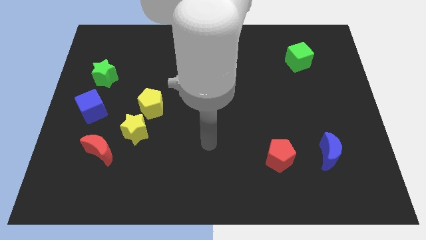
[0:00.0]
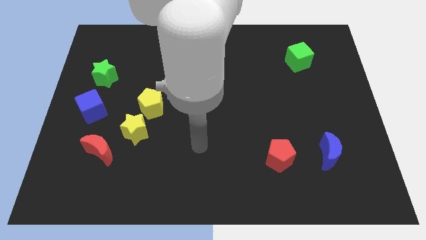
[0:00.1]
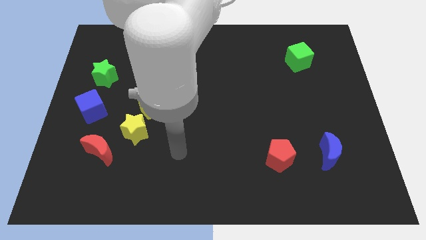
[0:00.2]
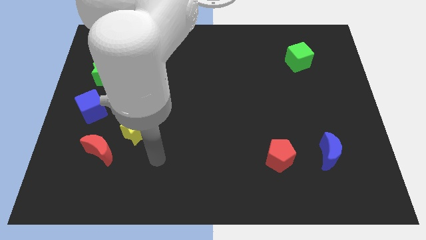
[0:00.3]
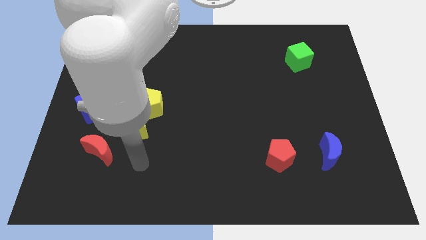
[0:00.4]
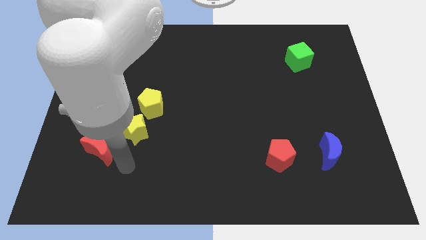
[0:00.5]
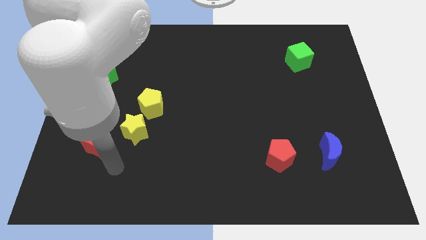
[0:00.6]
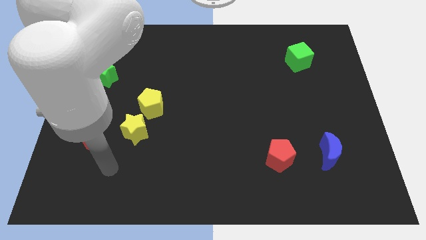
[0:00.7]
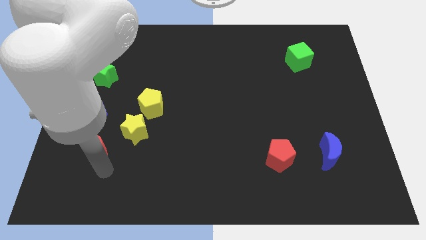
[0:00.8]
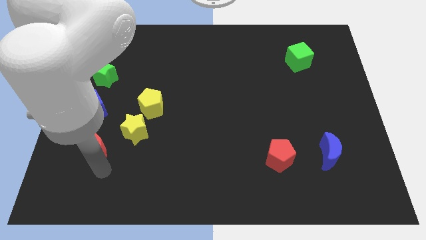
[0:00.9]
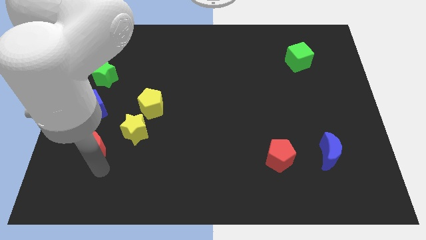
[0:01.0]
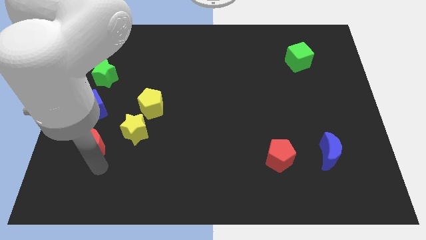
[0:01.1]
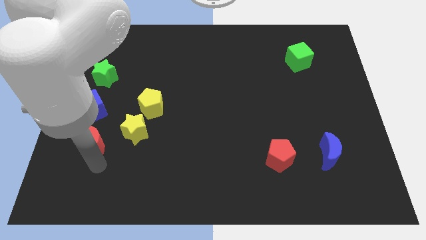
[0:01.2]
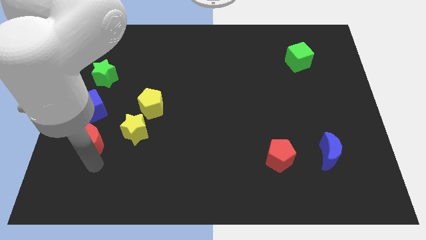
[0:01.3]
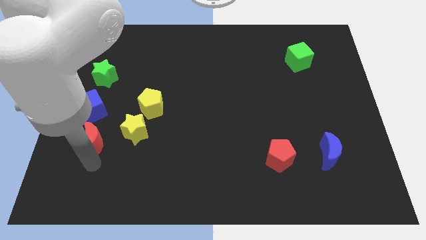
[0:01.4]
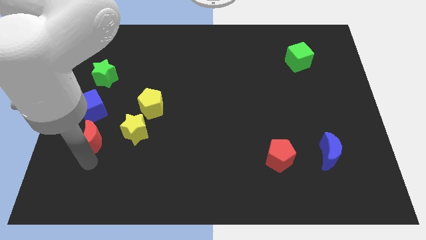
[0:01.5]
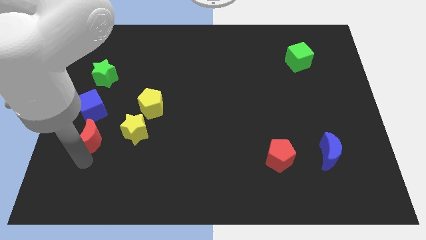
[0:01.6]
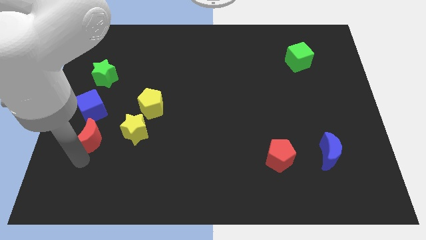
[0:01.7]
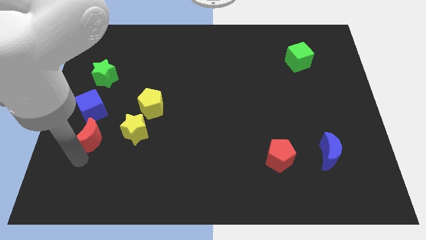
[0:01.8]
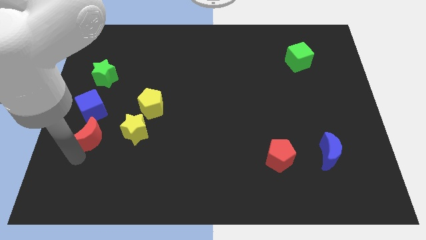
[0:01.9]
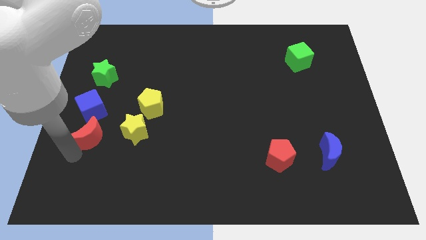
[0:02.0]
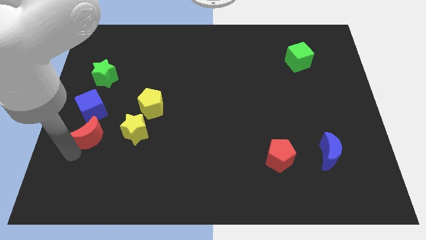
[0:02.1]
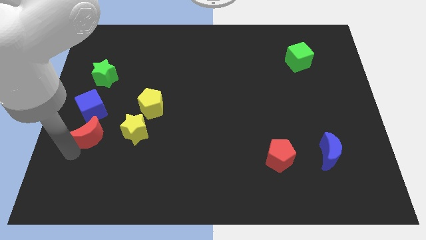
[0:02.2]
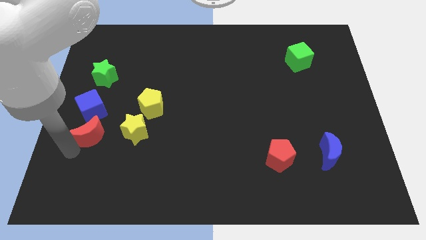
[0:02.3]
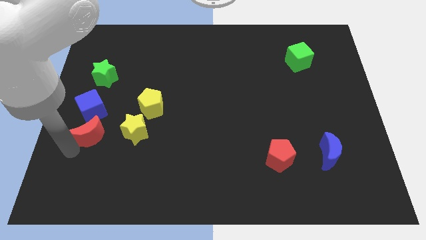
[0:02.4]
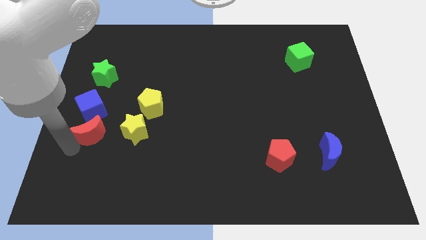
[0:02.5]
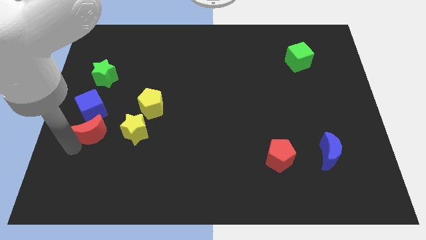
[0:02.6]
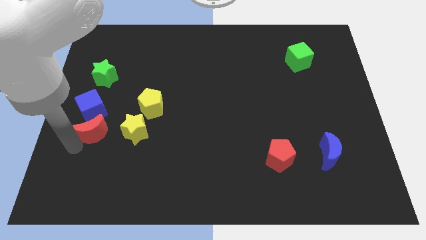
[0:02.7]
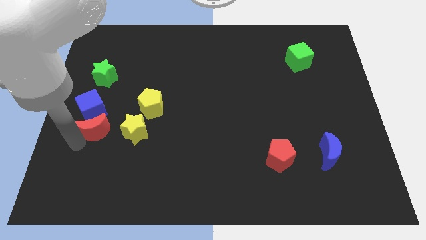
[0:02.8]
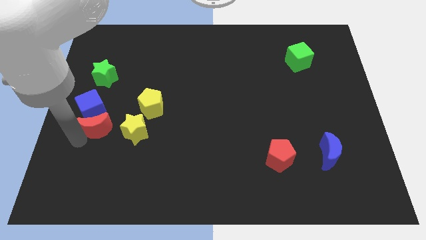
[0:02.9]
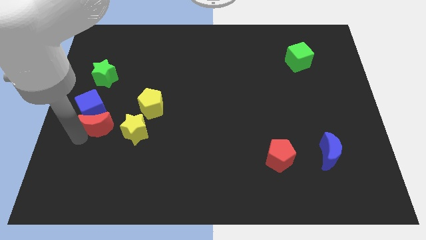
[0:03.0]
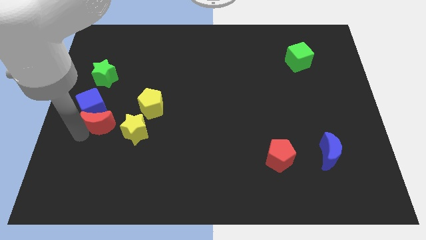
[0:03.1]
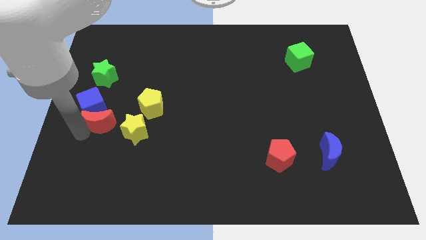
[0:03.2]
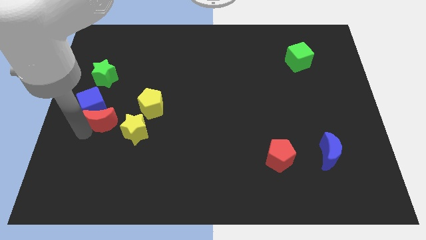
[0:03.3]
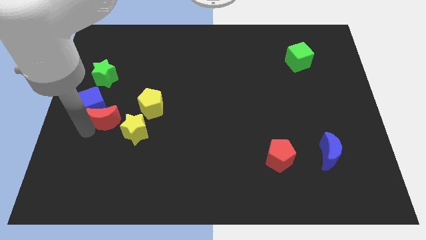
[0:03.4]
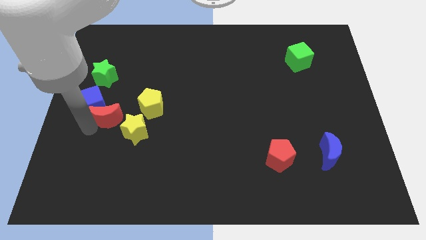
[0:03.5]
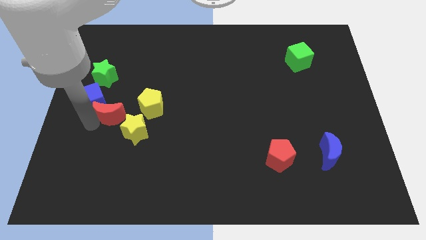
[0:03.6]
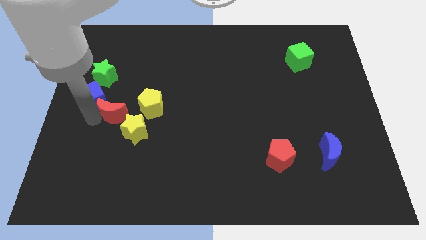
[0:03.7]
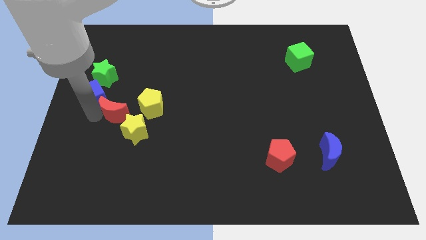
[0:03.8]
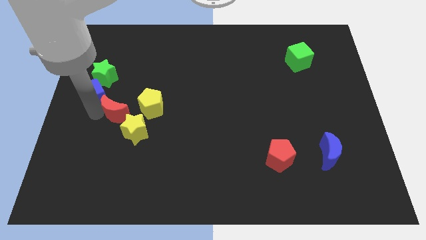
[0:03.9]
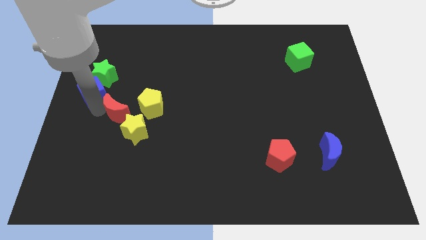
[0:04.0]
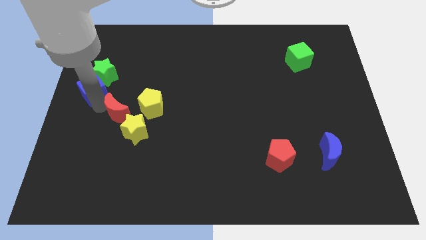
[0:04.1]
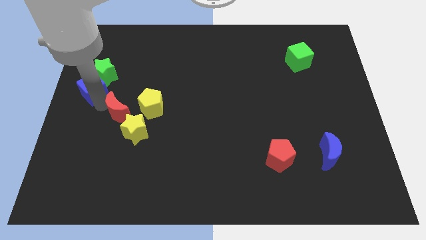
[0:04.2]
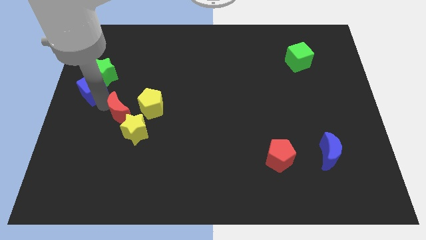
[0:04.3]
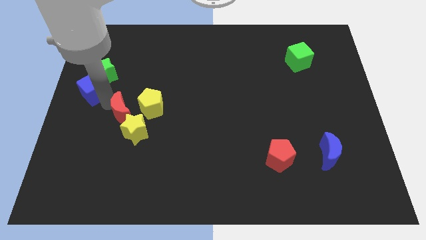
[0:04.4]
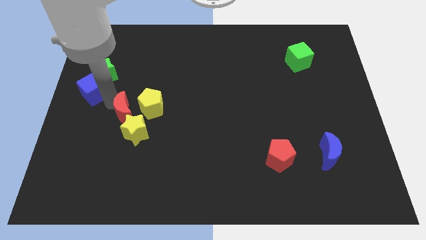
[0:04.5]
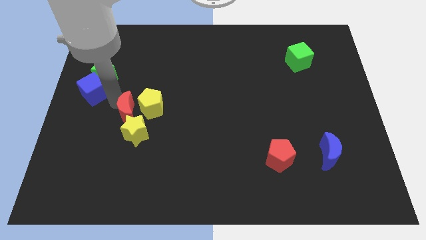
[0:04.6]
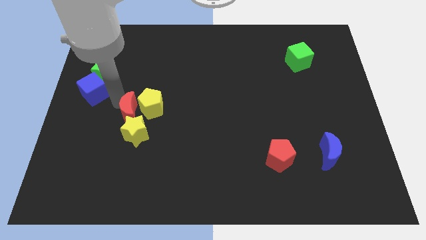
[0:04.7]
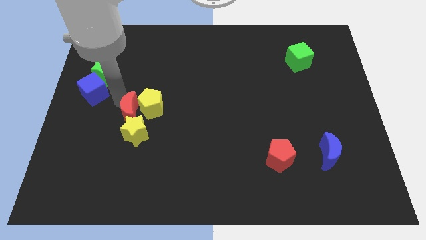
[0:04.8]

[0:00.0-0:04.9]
push the red moon next to the yellow pentagon

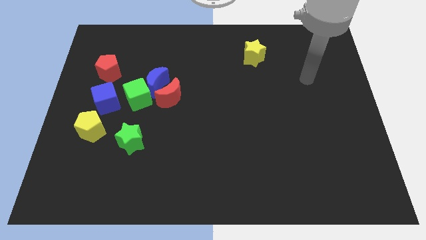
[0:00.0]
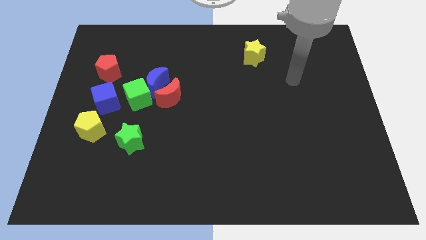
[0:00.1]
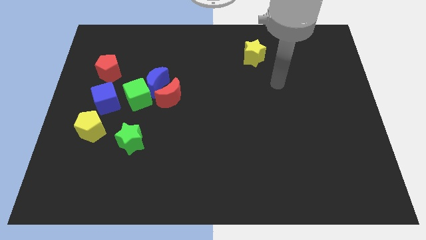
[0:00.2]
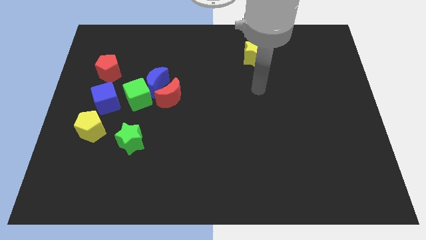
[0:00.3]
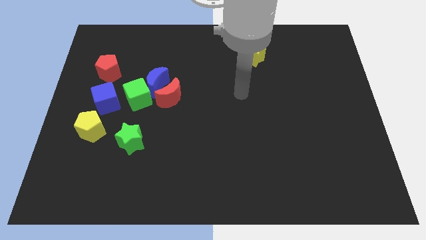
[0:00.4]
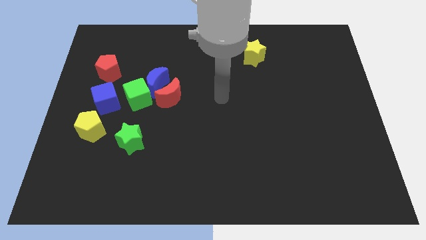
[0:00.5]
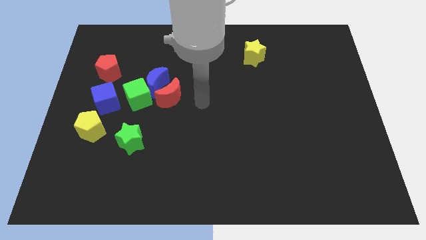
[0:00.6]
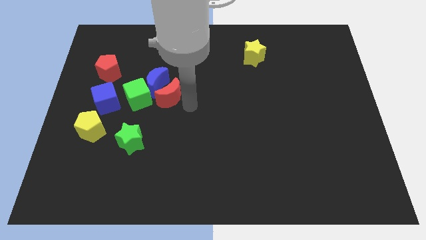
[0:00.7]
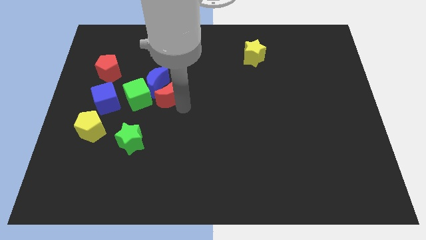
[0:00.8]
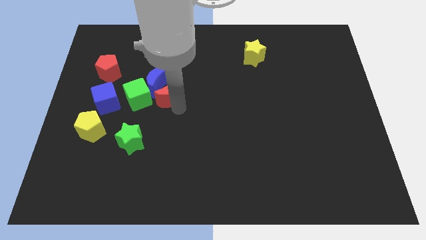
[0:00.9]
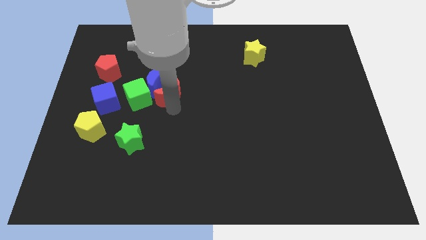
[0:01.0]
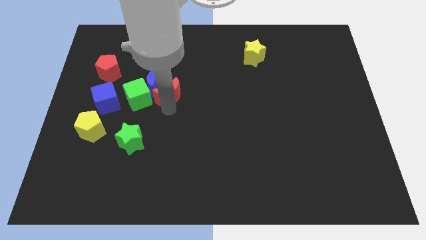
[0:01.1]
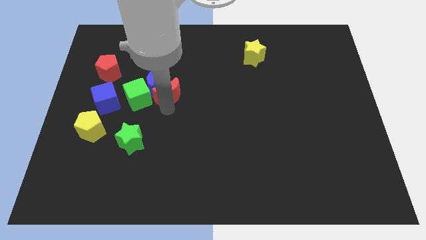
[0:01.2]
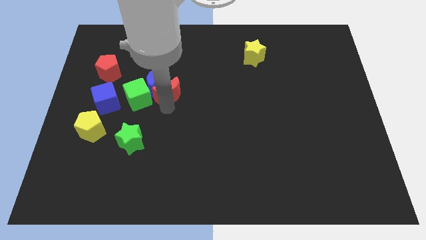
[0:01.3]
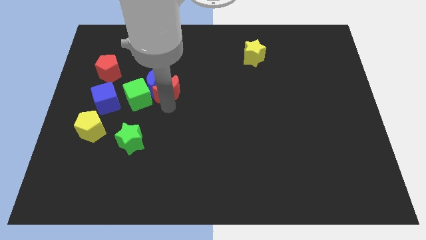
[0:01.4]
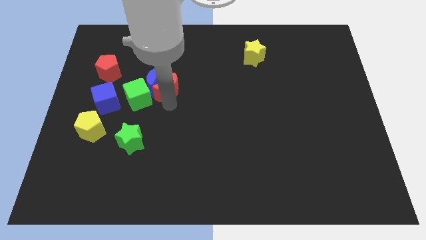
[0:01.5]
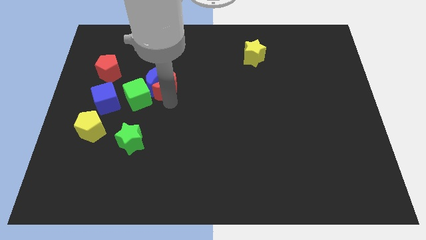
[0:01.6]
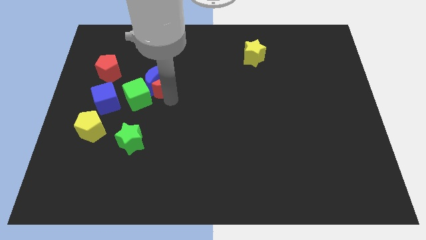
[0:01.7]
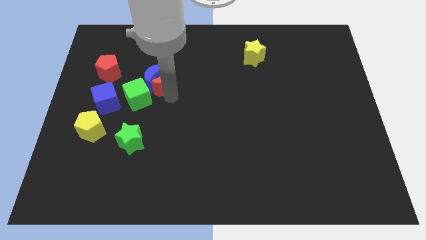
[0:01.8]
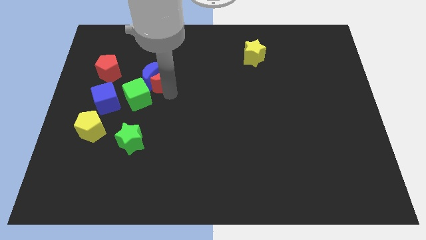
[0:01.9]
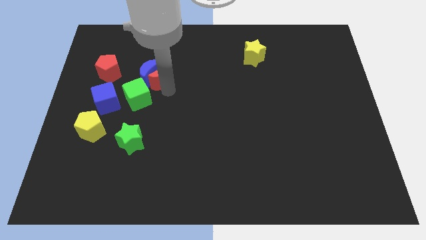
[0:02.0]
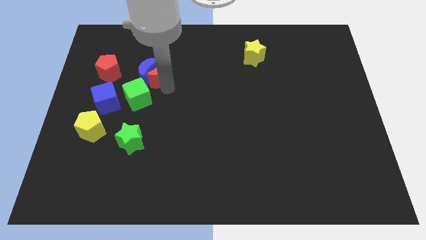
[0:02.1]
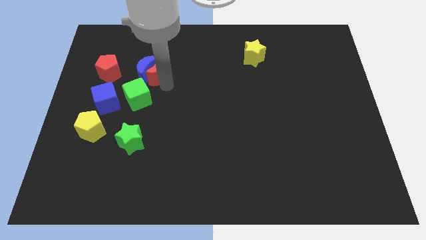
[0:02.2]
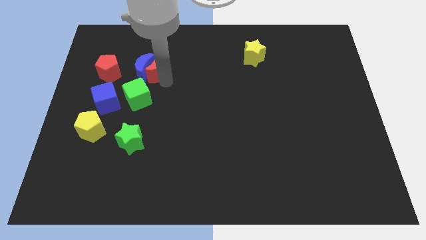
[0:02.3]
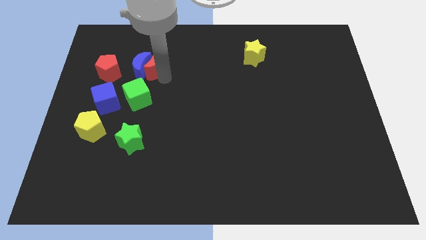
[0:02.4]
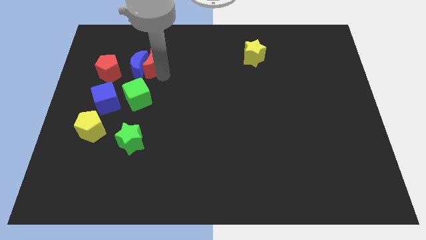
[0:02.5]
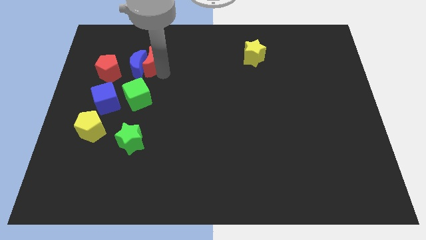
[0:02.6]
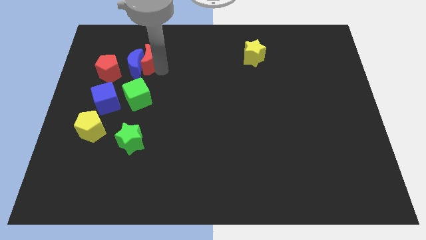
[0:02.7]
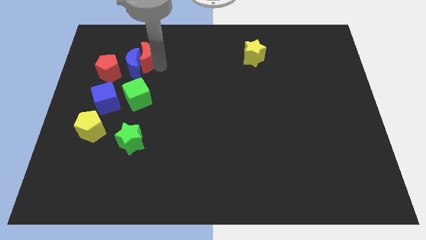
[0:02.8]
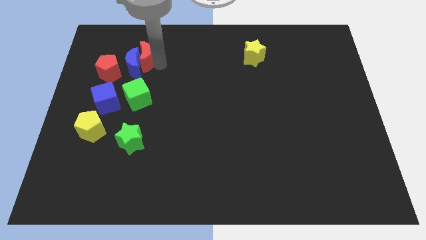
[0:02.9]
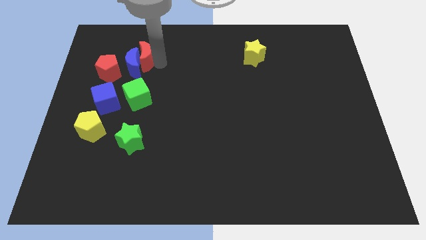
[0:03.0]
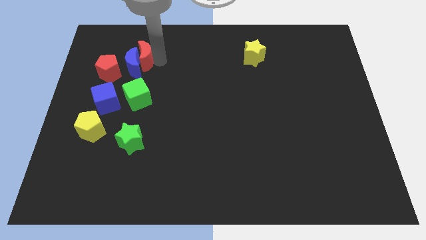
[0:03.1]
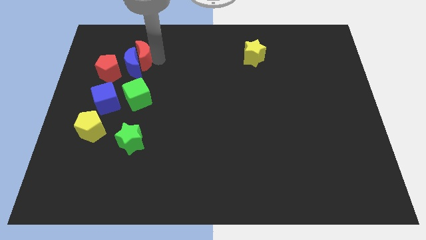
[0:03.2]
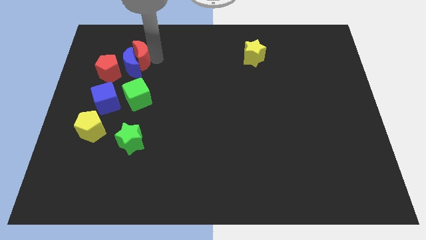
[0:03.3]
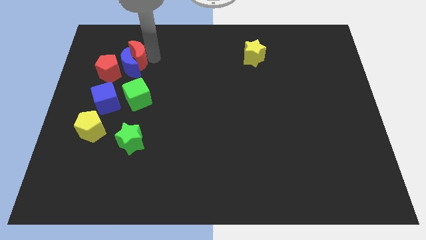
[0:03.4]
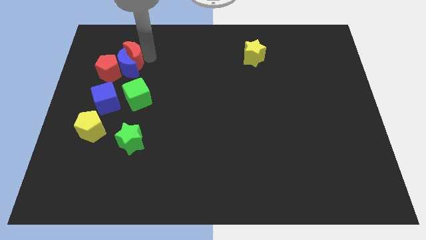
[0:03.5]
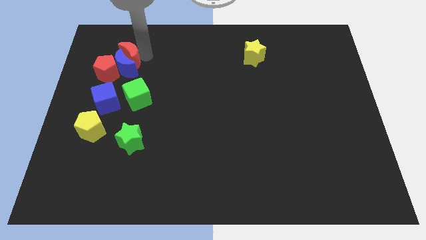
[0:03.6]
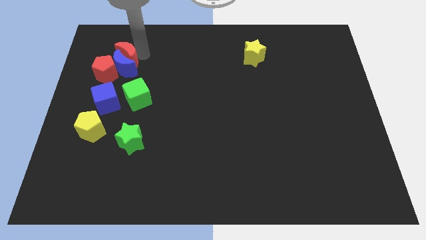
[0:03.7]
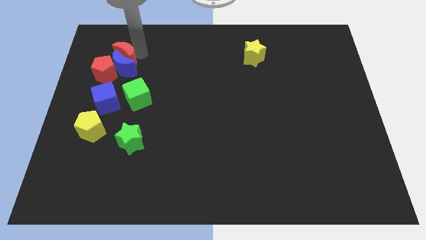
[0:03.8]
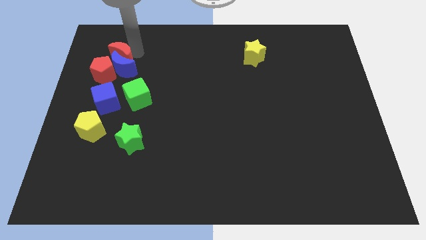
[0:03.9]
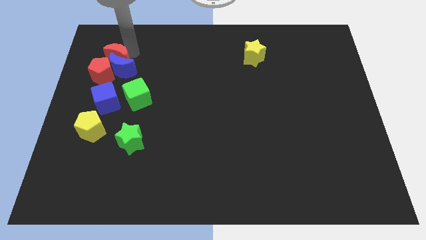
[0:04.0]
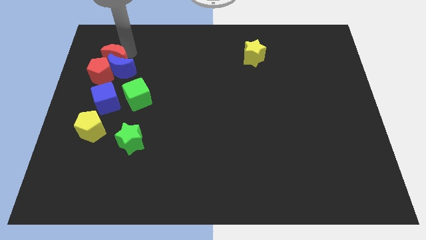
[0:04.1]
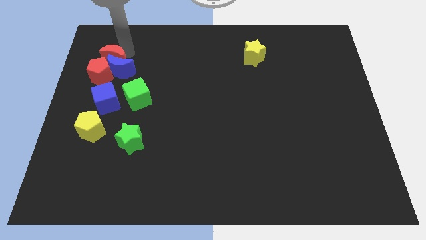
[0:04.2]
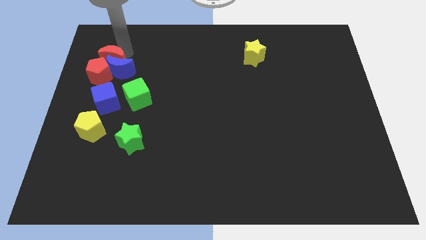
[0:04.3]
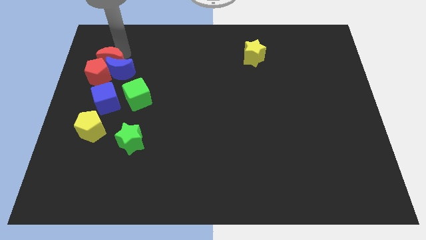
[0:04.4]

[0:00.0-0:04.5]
slide the red moon close to the red pentagon
